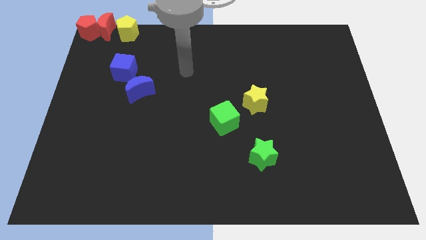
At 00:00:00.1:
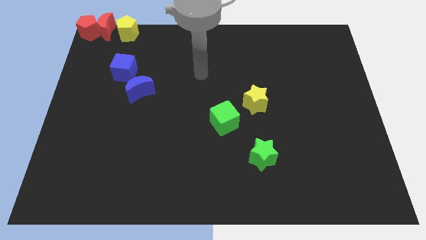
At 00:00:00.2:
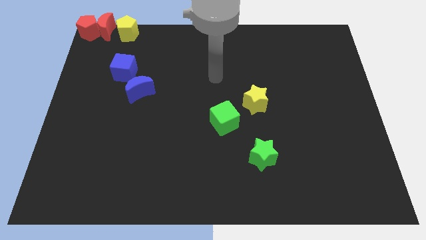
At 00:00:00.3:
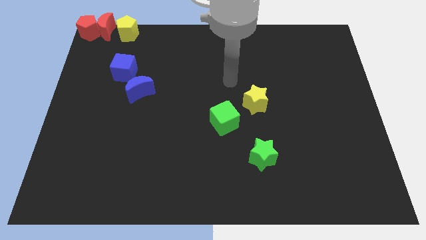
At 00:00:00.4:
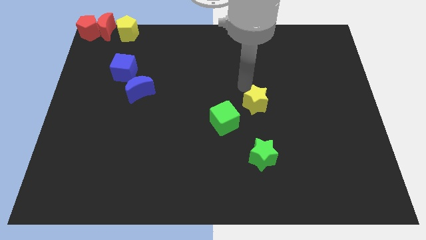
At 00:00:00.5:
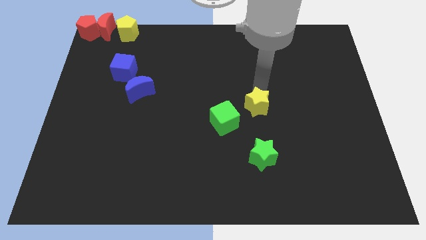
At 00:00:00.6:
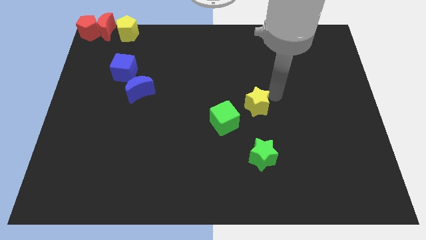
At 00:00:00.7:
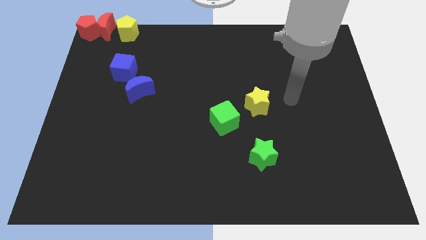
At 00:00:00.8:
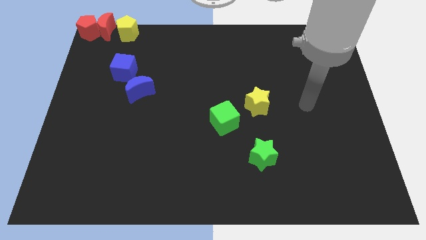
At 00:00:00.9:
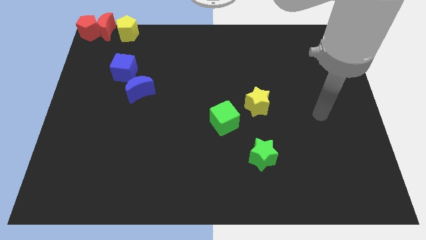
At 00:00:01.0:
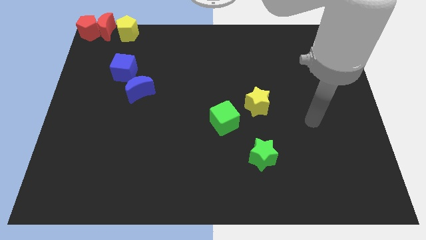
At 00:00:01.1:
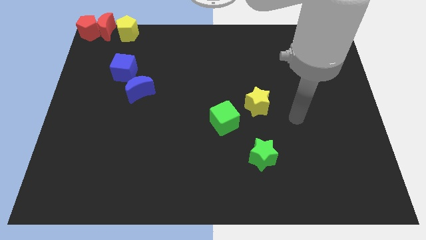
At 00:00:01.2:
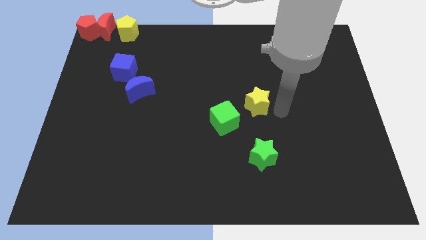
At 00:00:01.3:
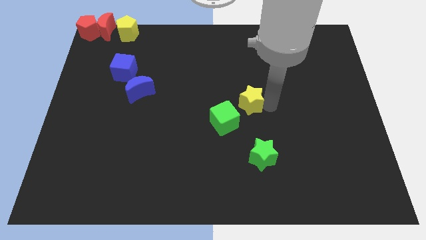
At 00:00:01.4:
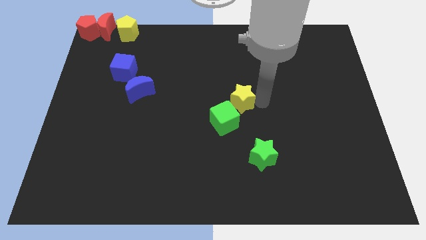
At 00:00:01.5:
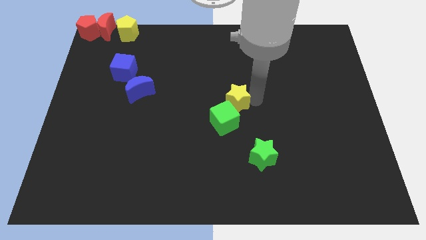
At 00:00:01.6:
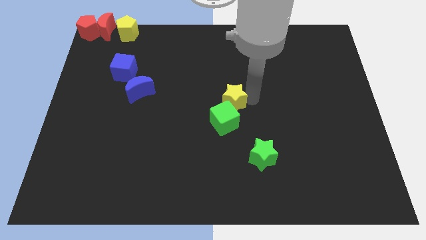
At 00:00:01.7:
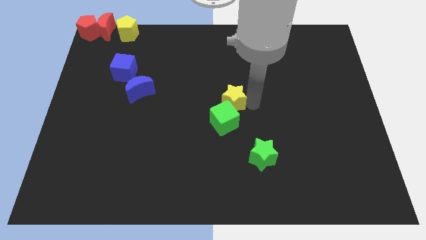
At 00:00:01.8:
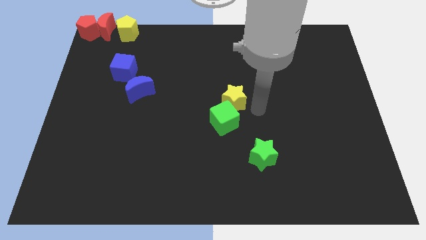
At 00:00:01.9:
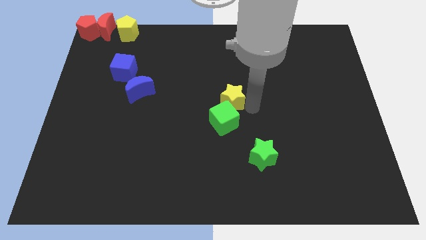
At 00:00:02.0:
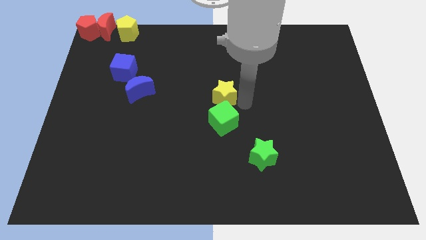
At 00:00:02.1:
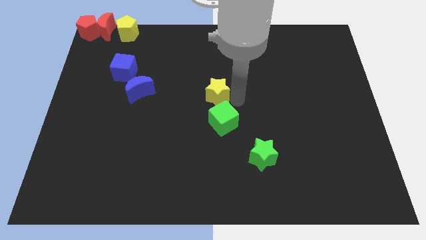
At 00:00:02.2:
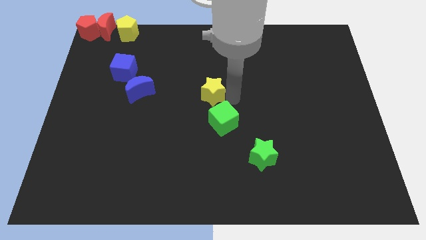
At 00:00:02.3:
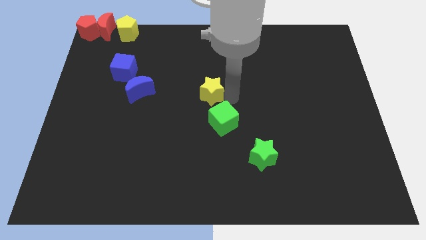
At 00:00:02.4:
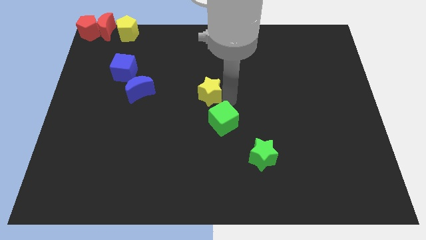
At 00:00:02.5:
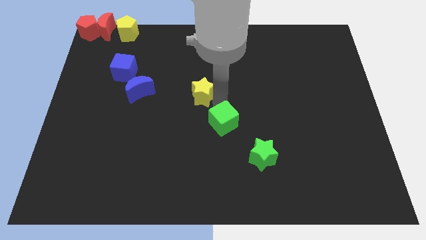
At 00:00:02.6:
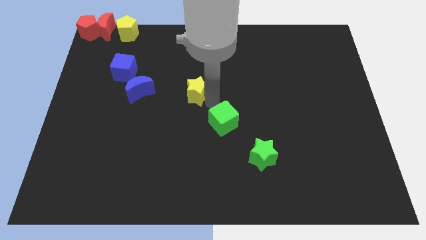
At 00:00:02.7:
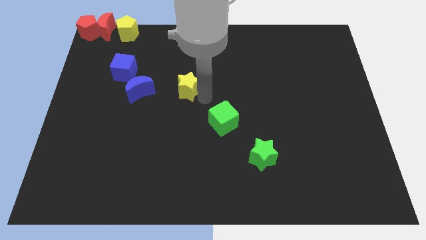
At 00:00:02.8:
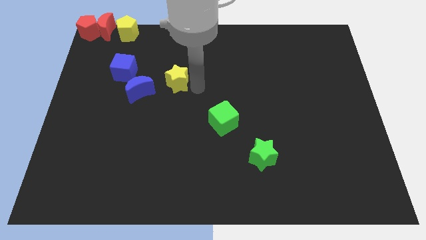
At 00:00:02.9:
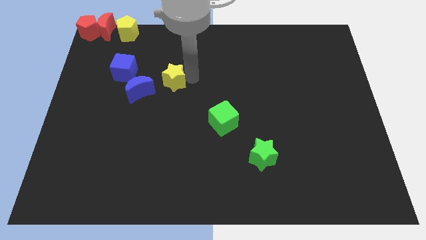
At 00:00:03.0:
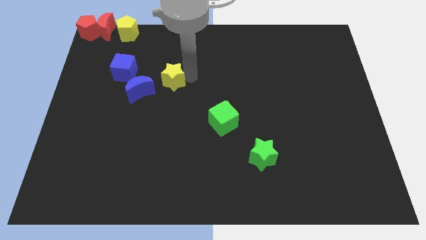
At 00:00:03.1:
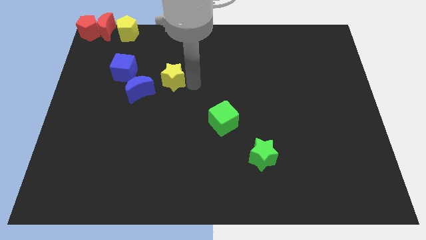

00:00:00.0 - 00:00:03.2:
move the yellow star diagonally on the top left side of the green cube

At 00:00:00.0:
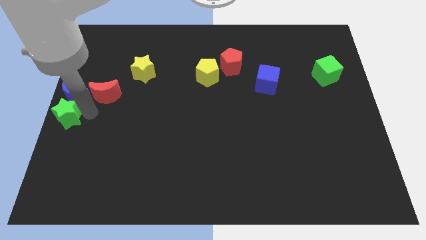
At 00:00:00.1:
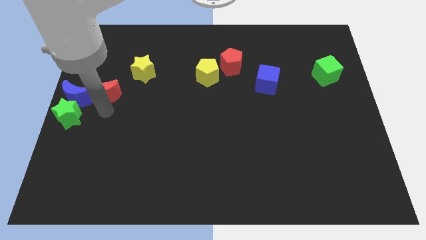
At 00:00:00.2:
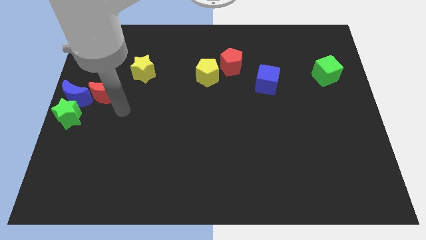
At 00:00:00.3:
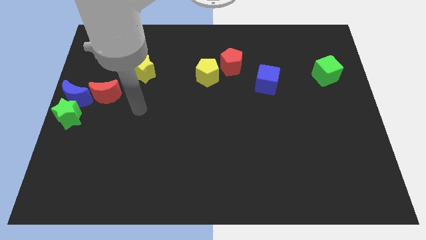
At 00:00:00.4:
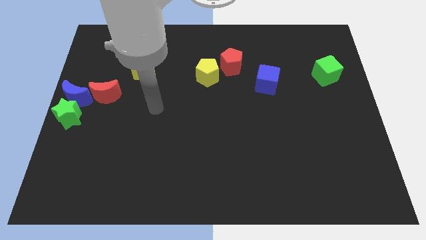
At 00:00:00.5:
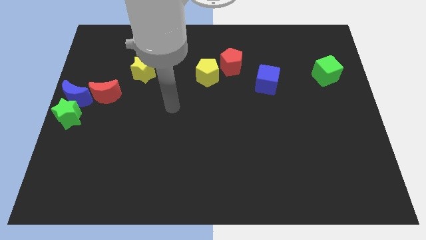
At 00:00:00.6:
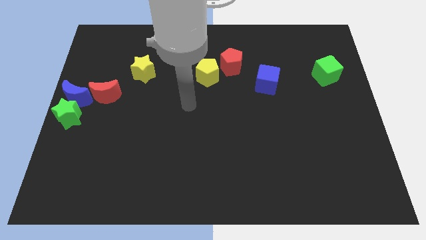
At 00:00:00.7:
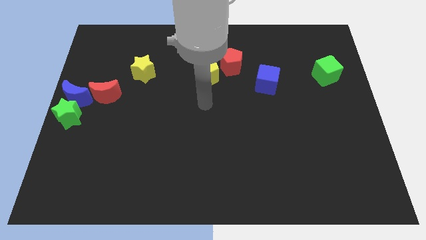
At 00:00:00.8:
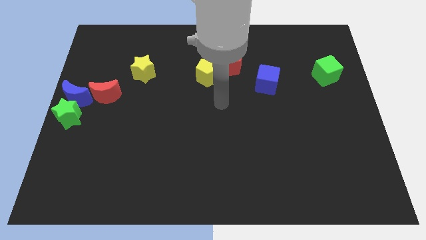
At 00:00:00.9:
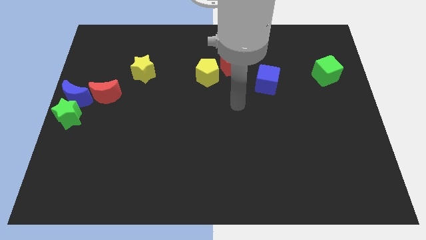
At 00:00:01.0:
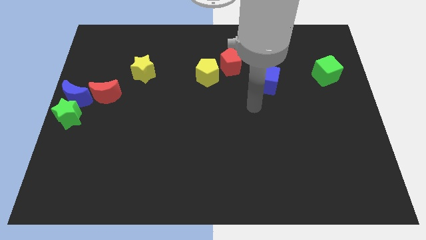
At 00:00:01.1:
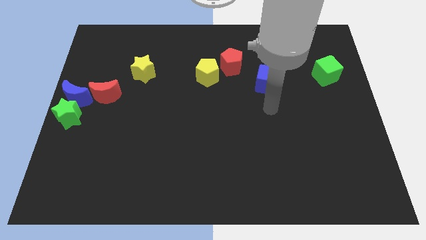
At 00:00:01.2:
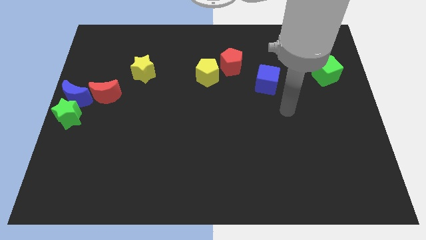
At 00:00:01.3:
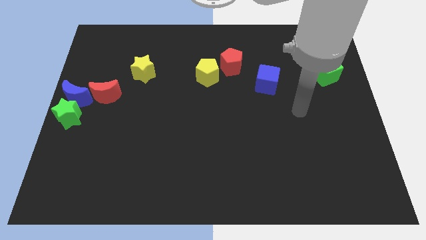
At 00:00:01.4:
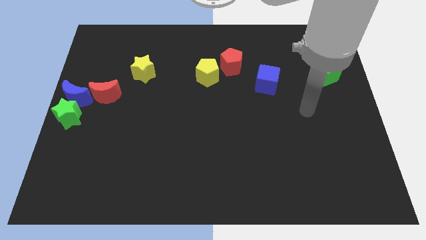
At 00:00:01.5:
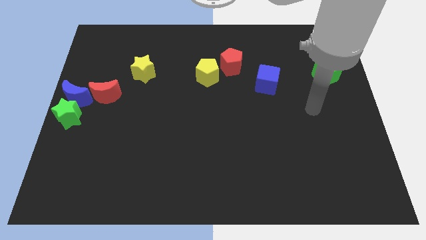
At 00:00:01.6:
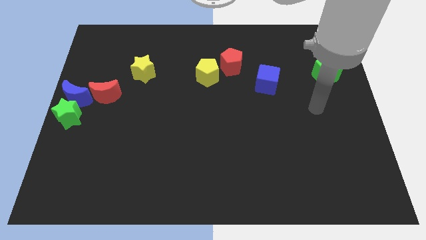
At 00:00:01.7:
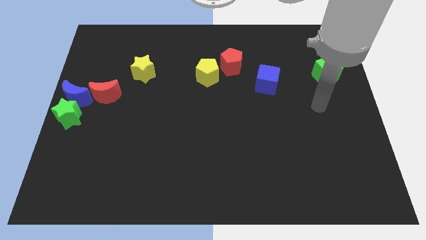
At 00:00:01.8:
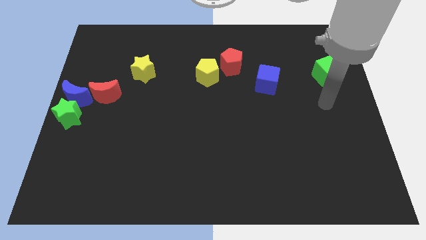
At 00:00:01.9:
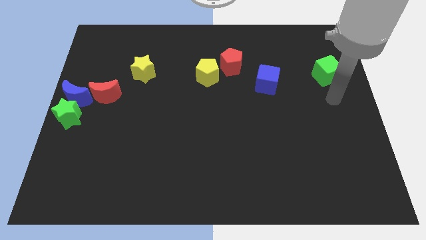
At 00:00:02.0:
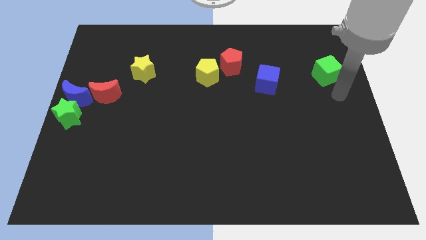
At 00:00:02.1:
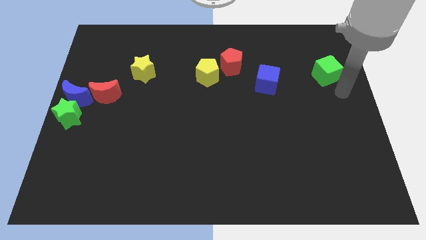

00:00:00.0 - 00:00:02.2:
place the arm at the bottom of the green cube

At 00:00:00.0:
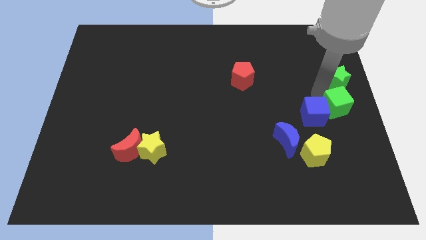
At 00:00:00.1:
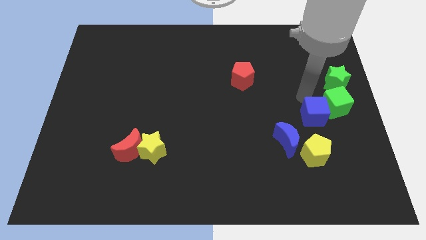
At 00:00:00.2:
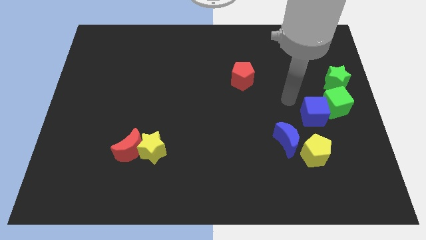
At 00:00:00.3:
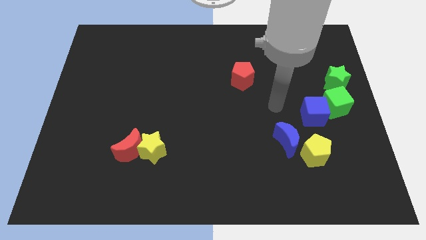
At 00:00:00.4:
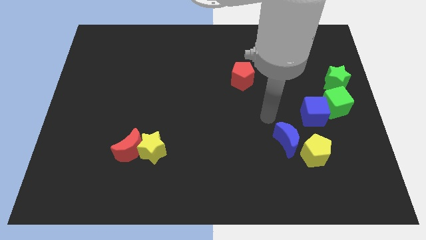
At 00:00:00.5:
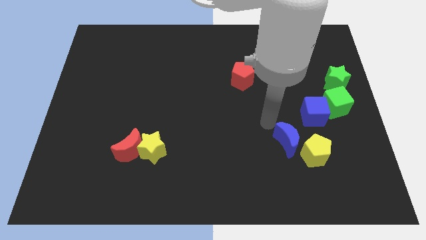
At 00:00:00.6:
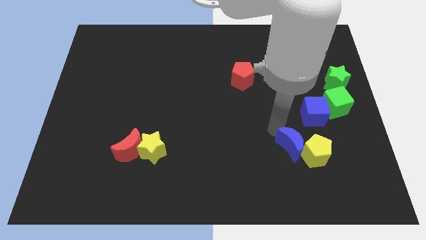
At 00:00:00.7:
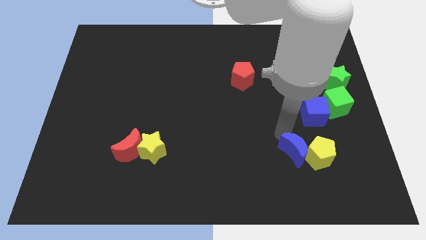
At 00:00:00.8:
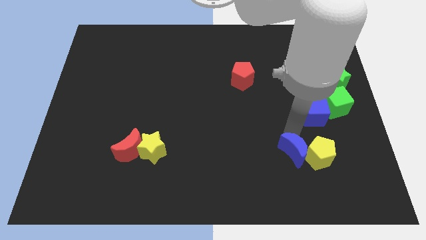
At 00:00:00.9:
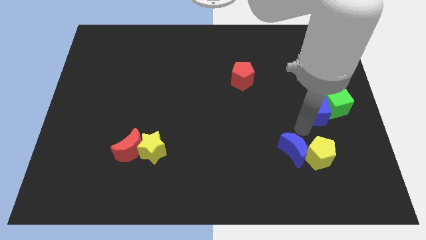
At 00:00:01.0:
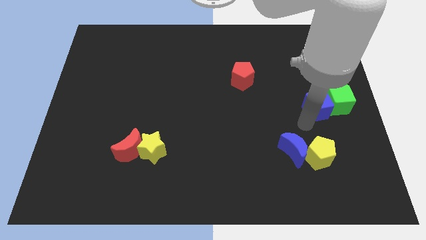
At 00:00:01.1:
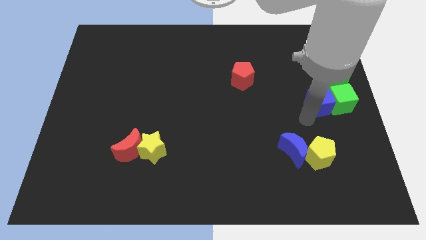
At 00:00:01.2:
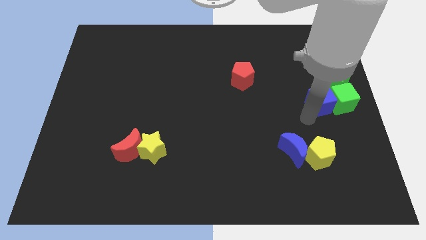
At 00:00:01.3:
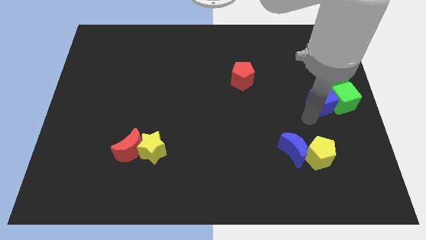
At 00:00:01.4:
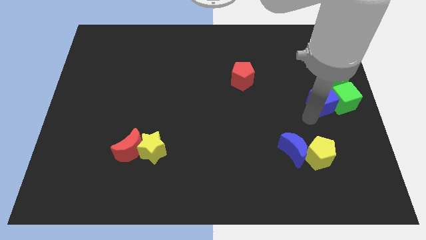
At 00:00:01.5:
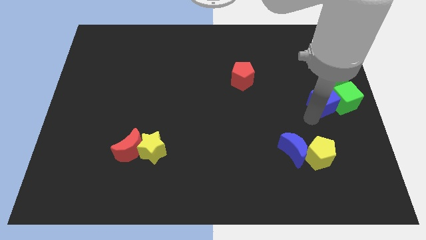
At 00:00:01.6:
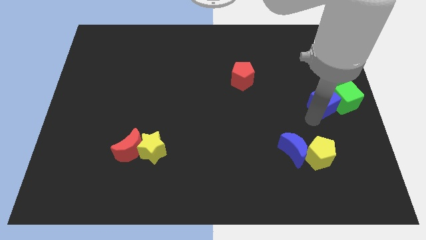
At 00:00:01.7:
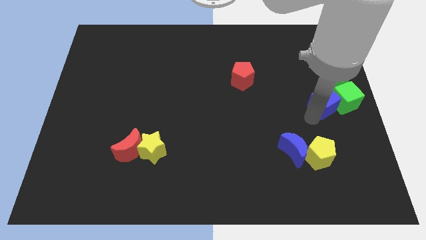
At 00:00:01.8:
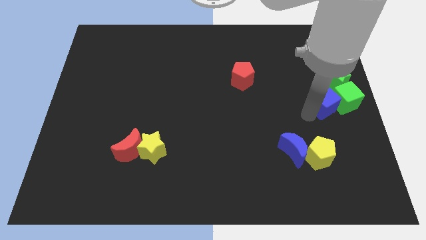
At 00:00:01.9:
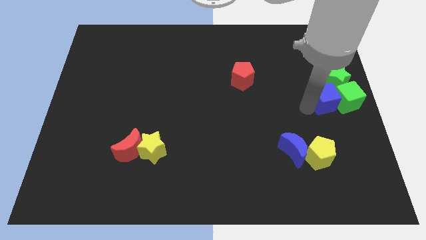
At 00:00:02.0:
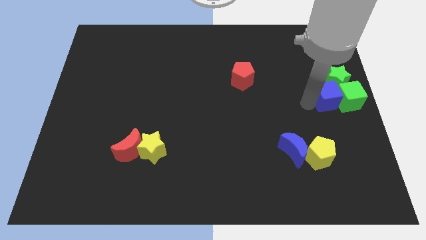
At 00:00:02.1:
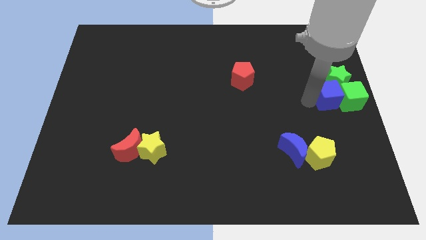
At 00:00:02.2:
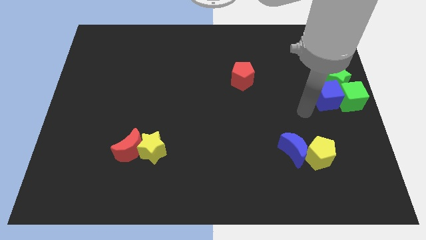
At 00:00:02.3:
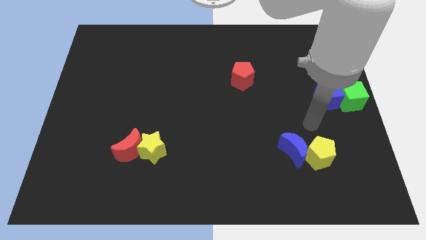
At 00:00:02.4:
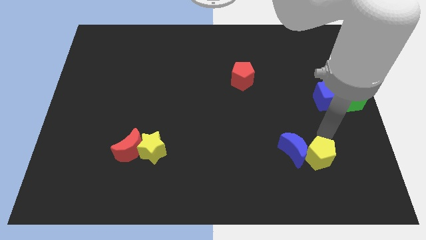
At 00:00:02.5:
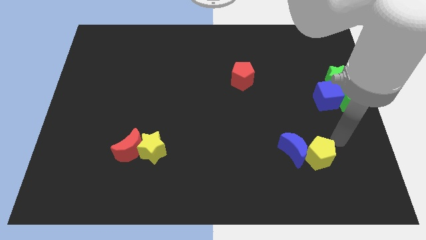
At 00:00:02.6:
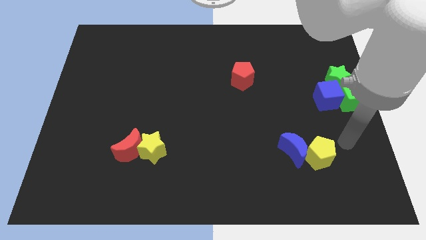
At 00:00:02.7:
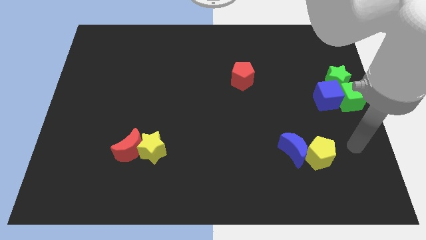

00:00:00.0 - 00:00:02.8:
move the blue cube to the left of the green cube

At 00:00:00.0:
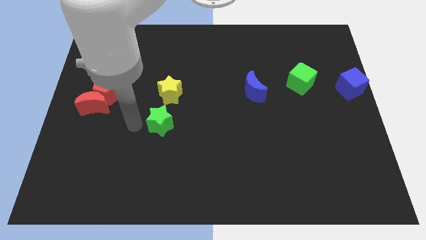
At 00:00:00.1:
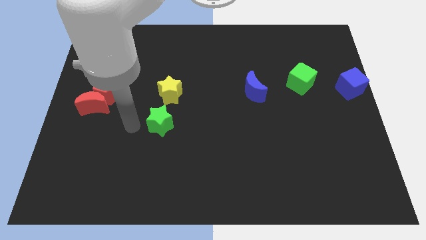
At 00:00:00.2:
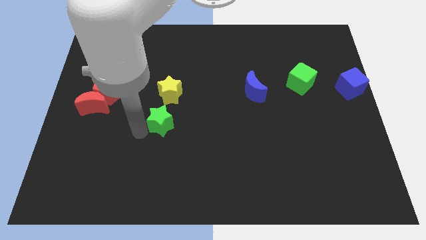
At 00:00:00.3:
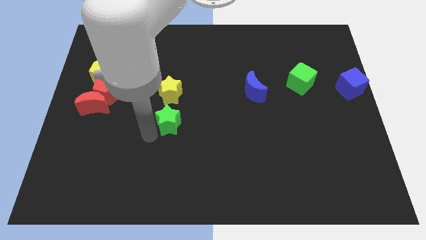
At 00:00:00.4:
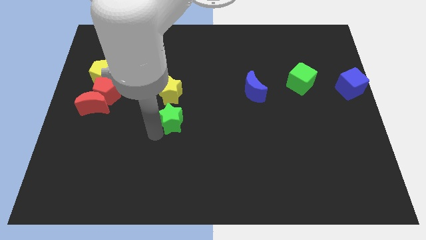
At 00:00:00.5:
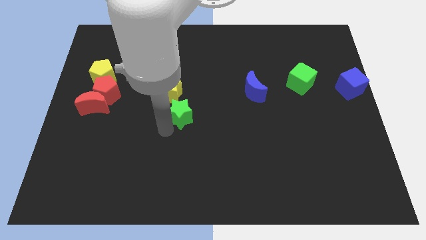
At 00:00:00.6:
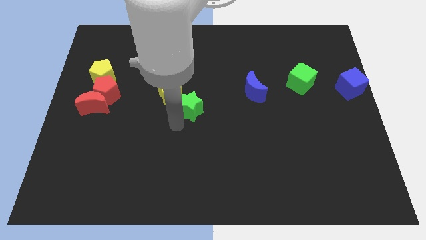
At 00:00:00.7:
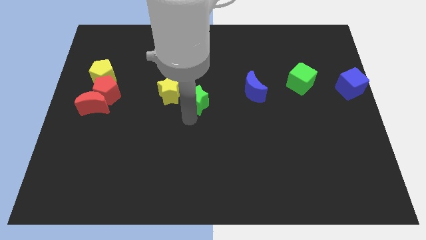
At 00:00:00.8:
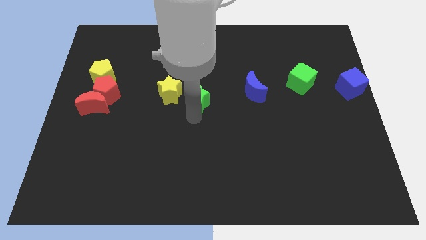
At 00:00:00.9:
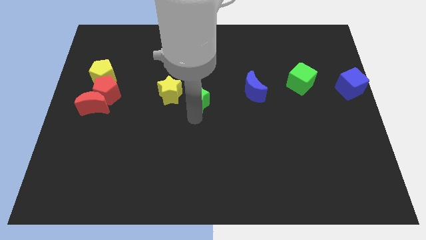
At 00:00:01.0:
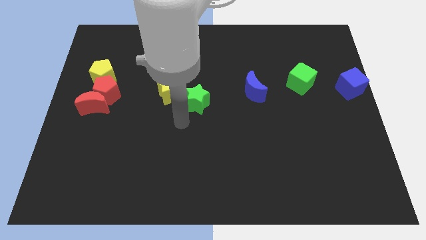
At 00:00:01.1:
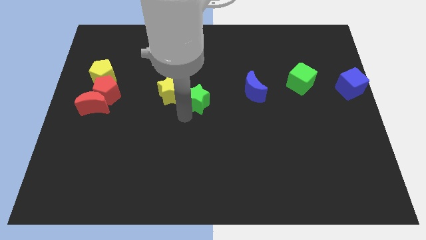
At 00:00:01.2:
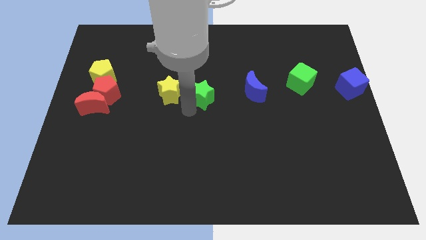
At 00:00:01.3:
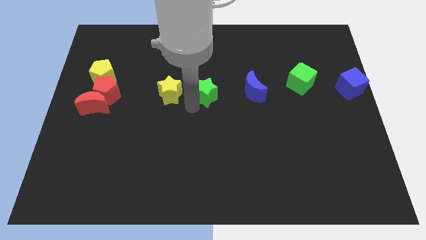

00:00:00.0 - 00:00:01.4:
move green star to the right of yellow star
